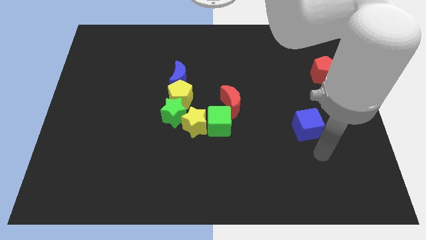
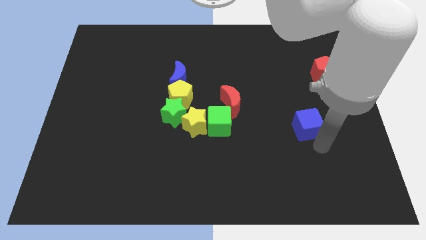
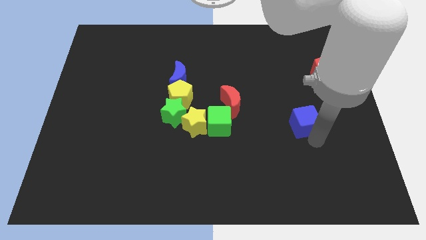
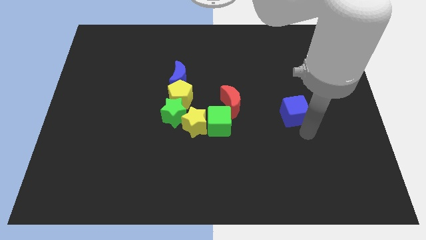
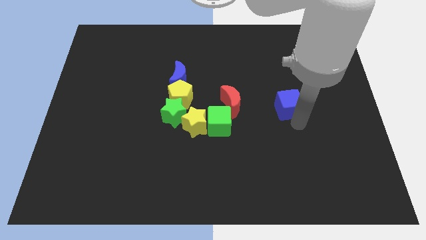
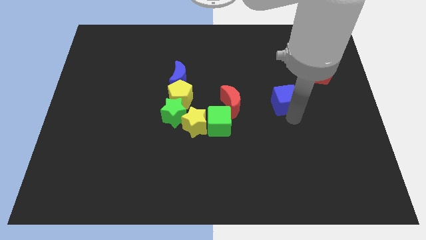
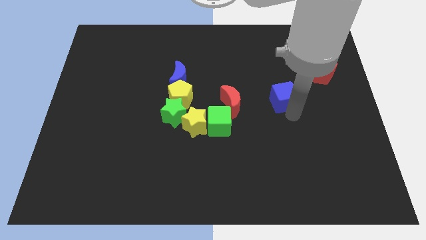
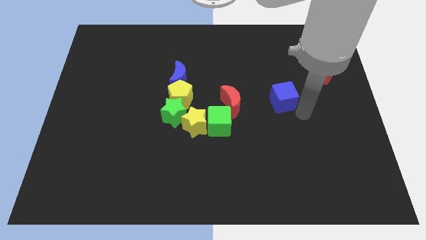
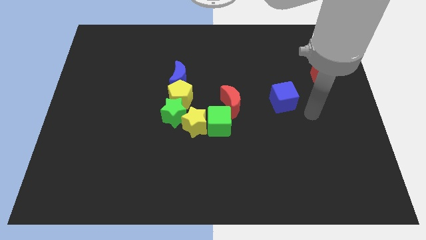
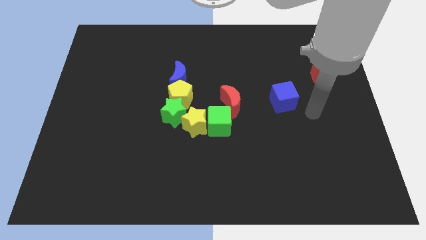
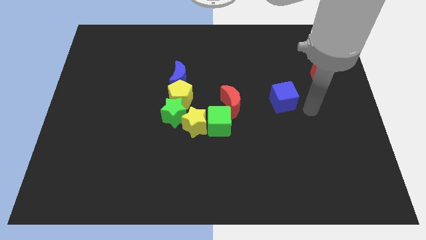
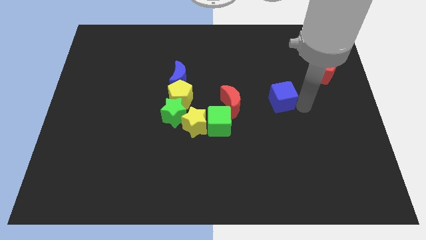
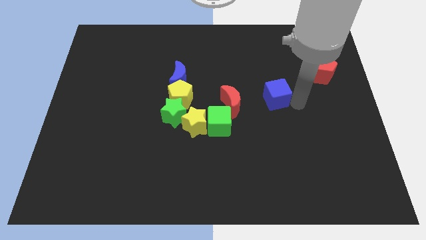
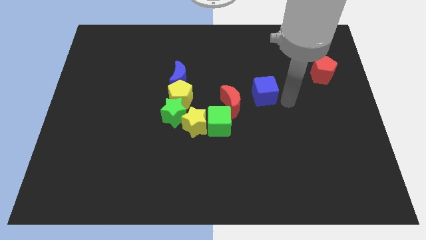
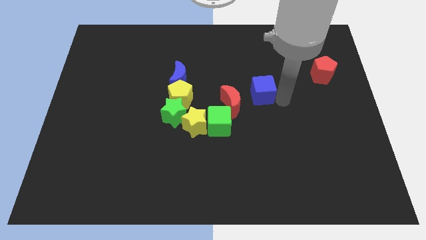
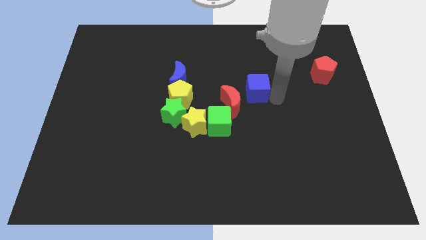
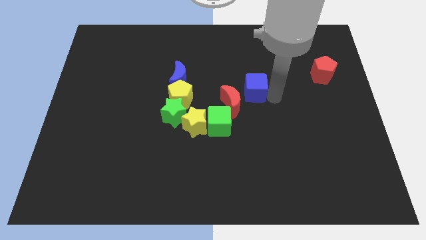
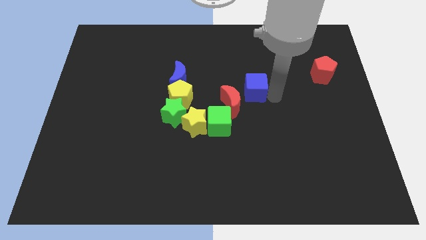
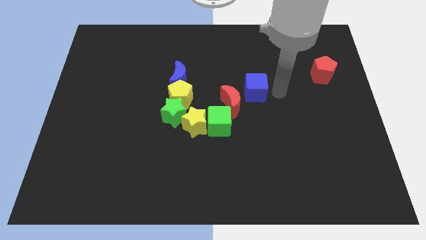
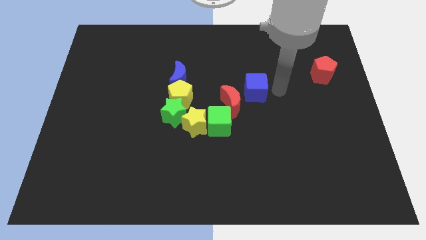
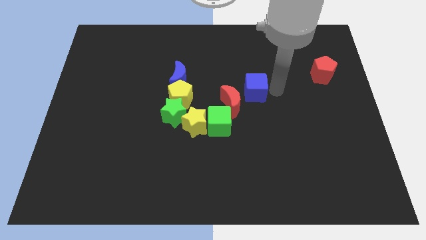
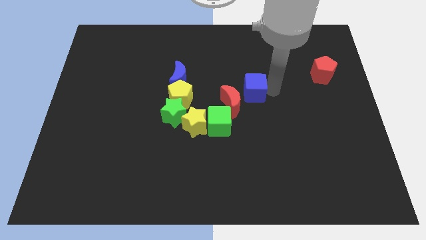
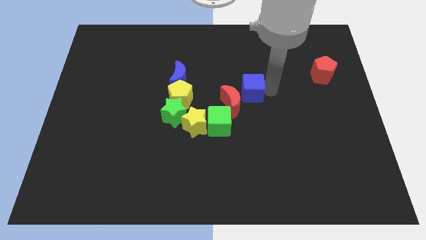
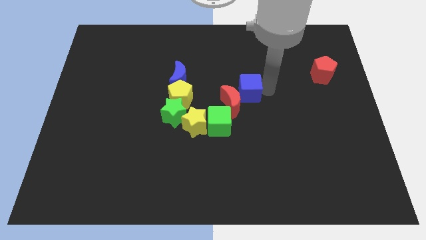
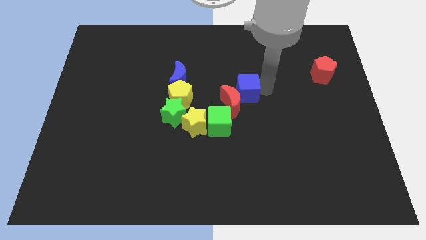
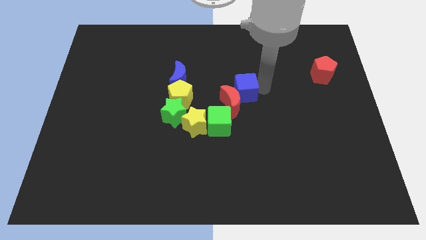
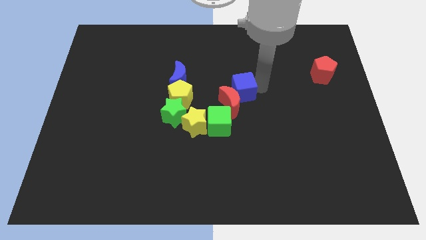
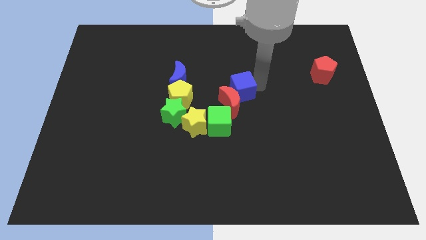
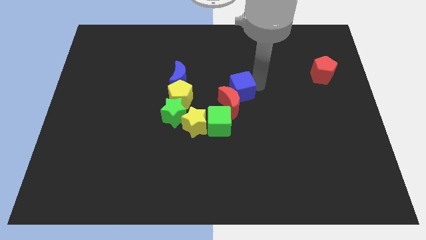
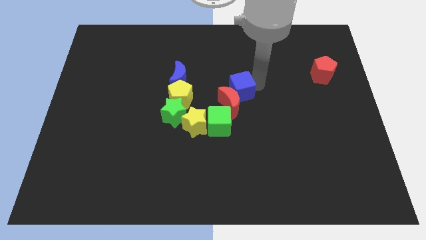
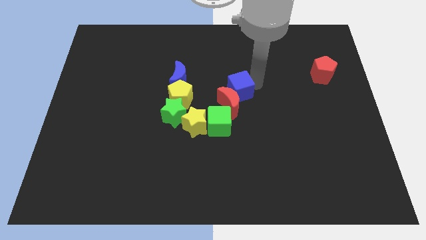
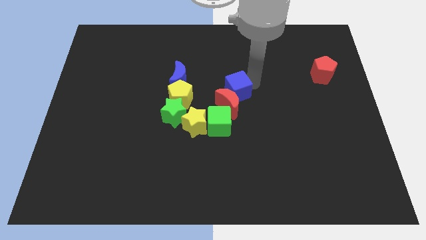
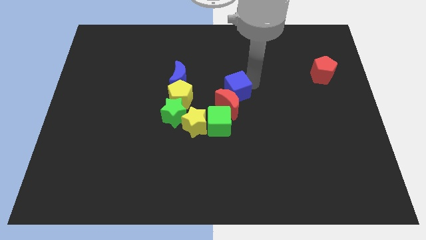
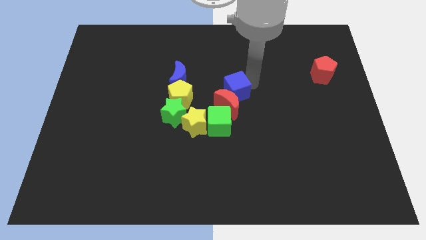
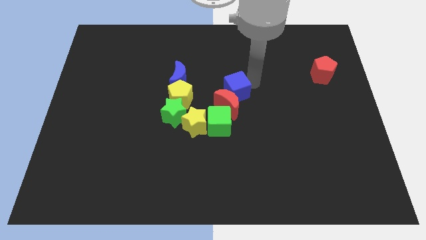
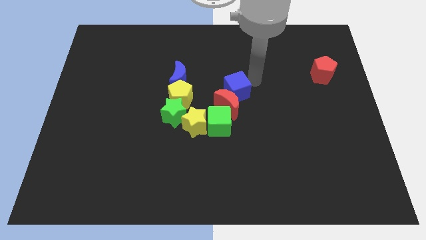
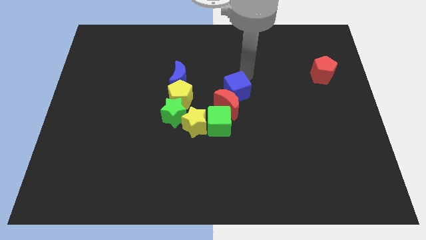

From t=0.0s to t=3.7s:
move blue cube right above the red moon

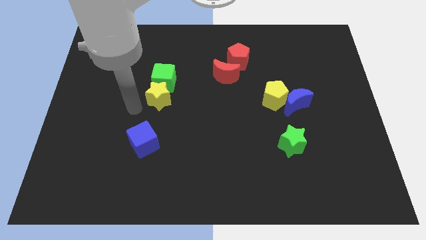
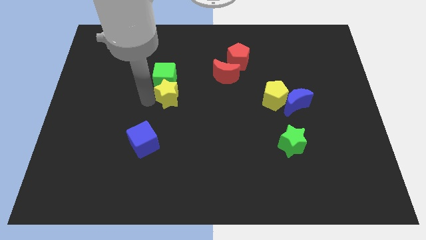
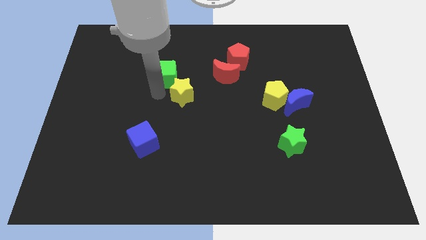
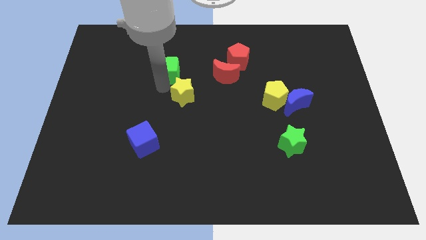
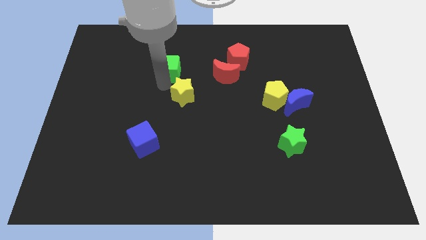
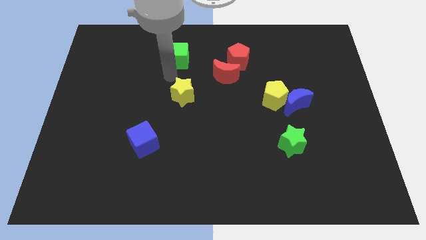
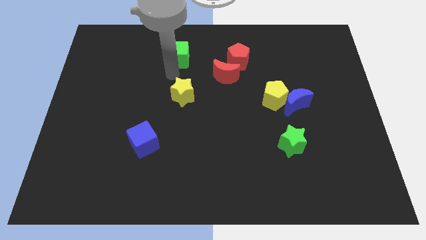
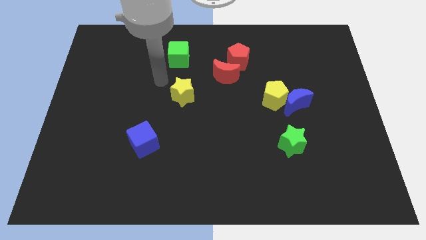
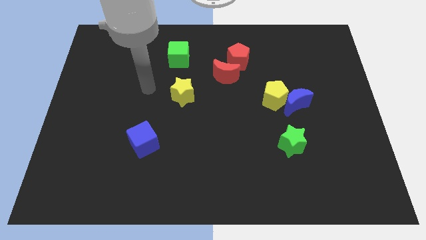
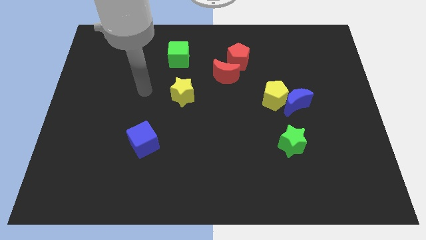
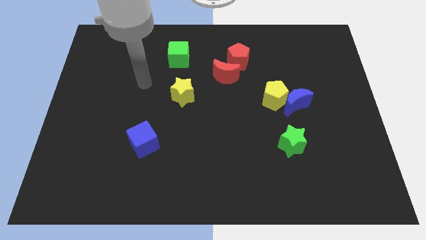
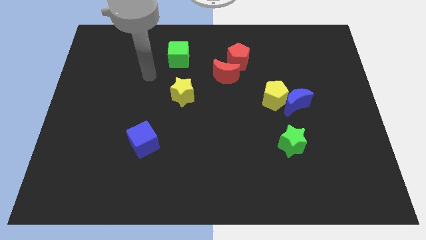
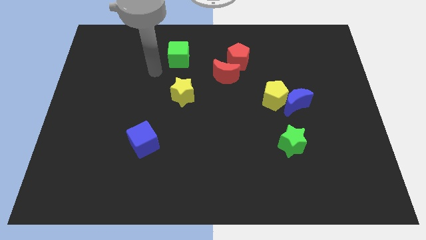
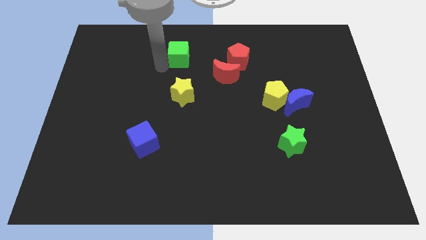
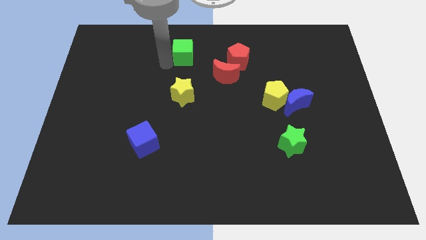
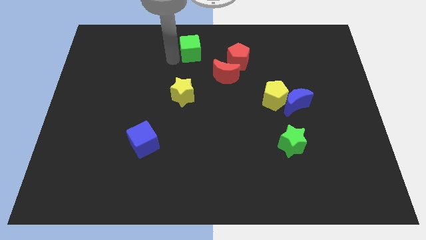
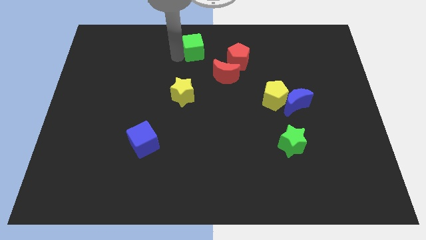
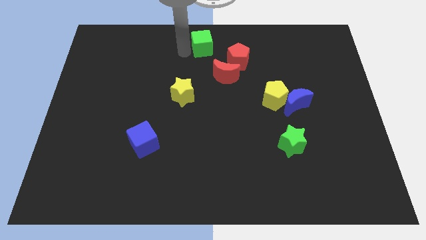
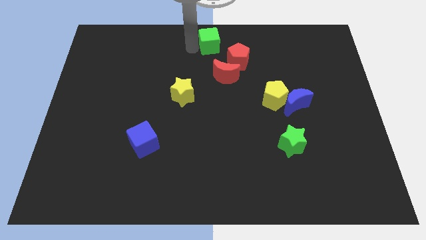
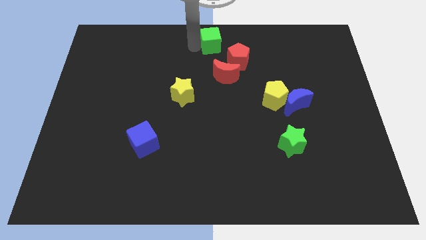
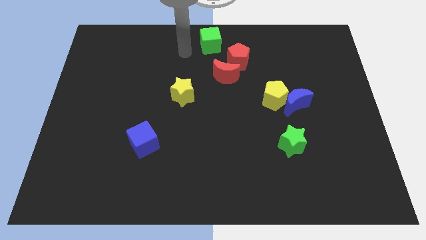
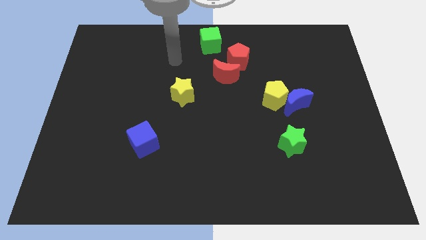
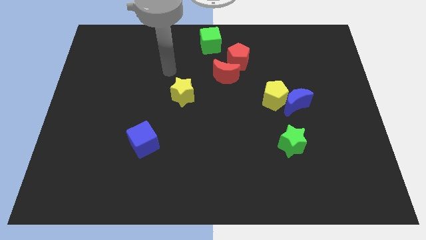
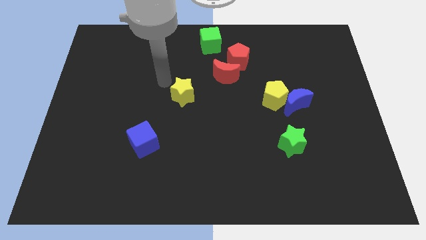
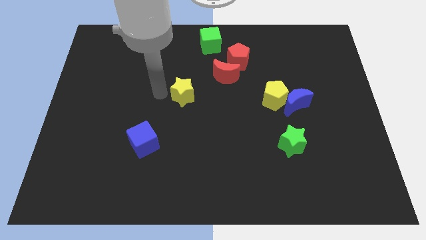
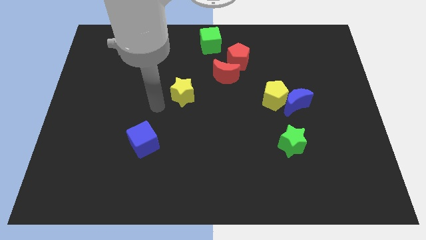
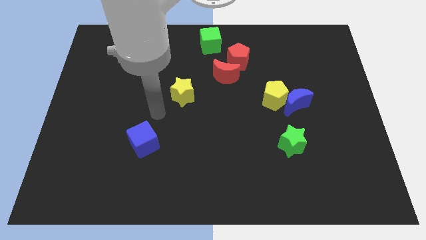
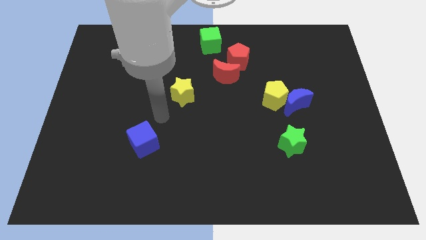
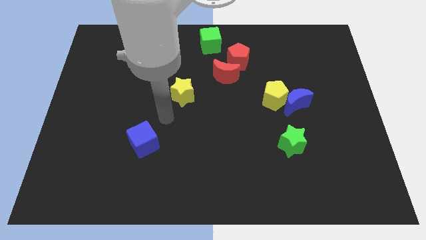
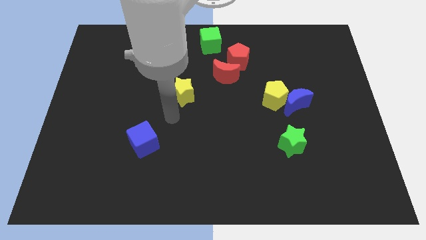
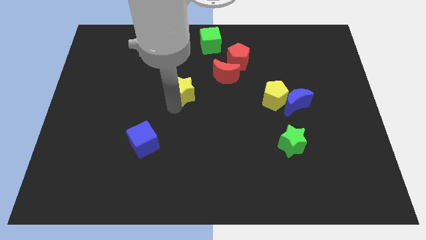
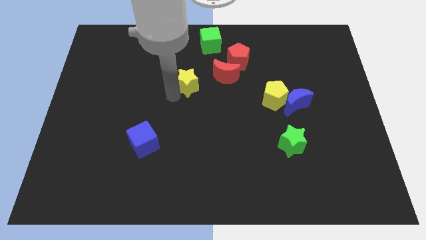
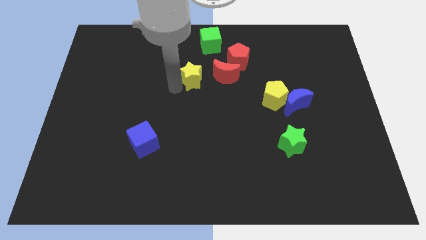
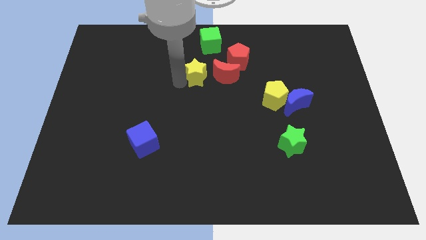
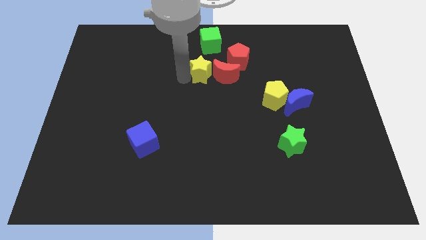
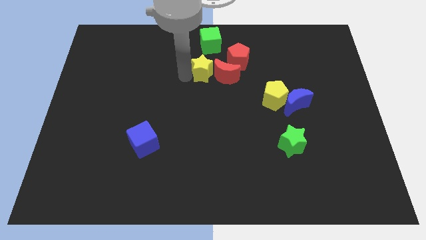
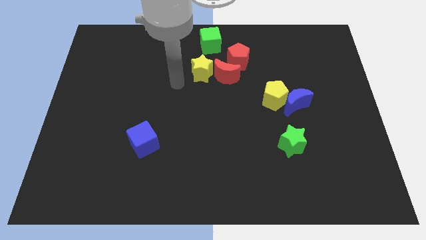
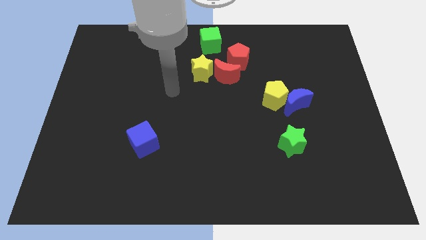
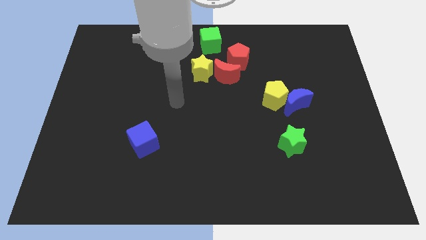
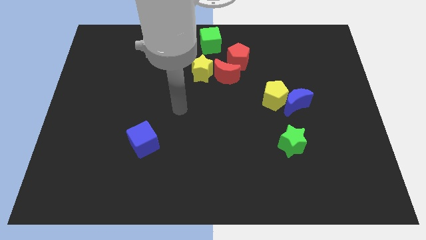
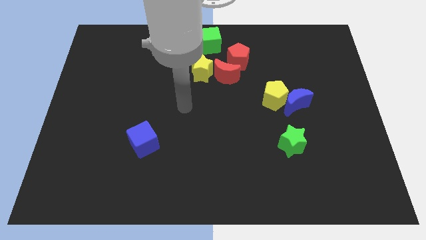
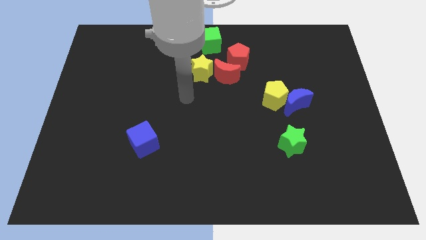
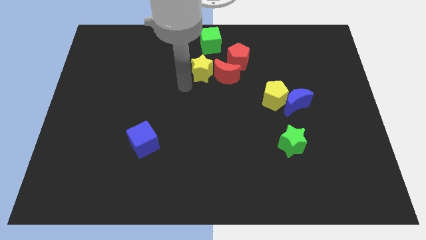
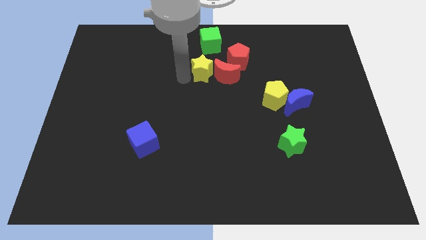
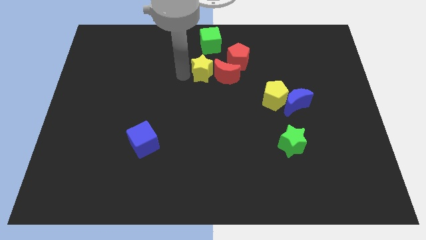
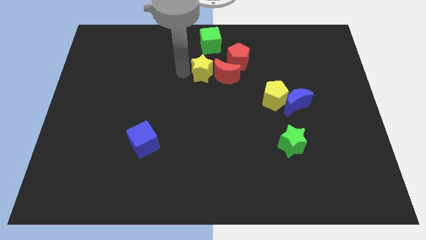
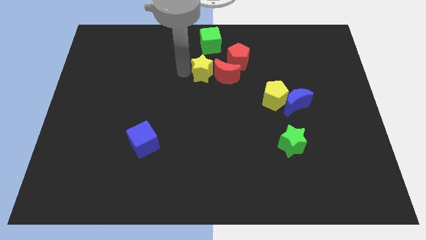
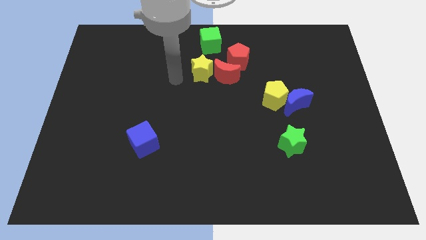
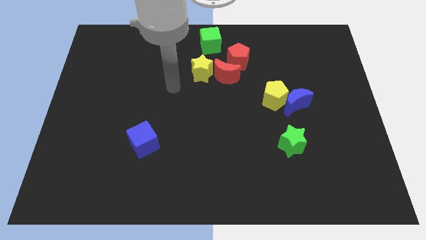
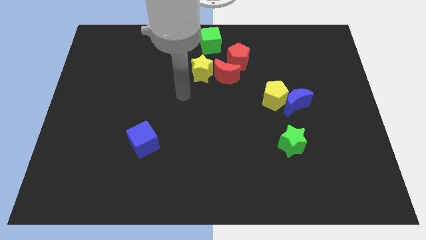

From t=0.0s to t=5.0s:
push the green cube and the yellow star to the top center of the board

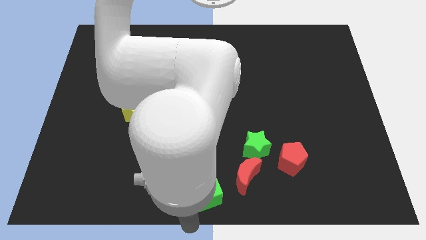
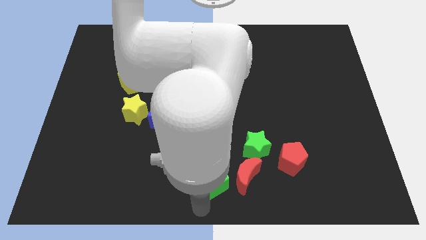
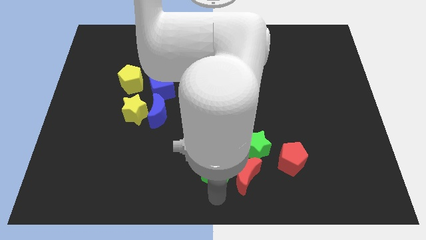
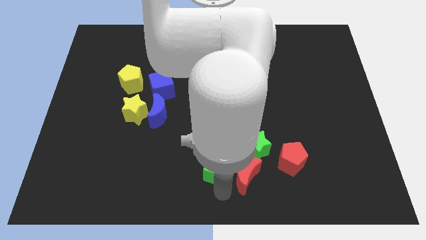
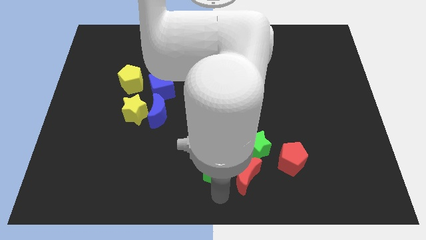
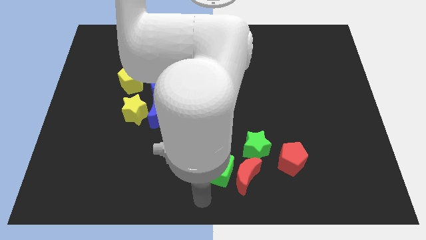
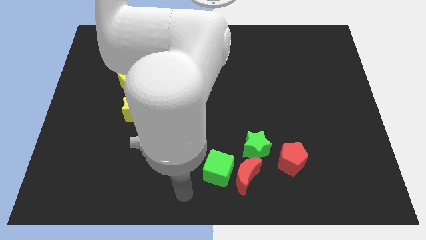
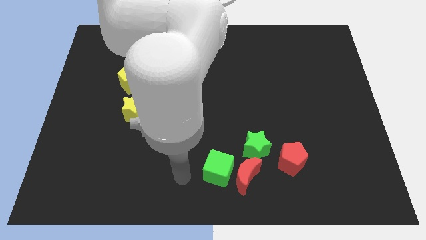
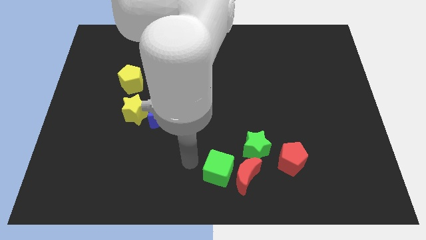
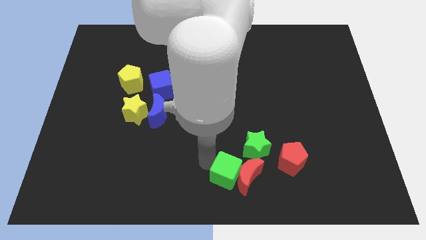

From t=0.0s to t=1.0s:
slightly move the green cube left to the red crescent
